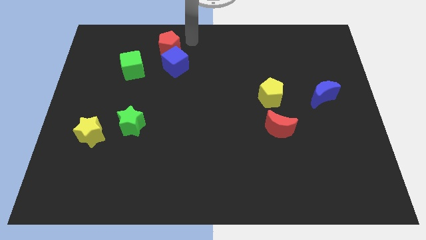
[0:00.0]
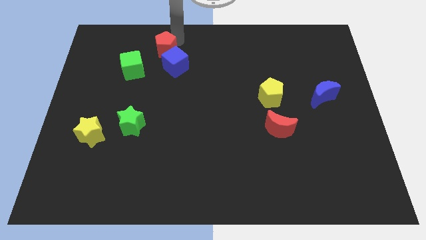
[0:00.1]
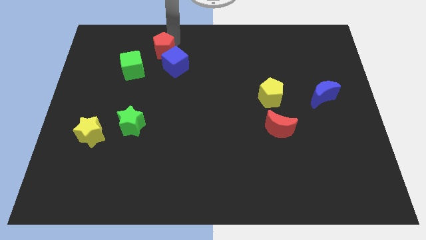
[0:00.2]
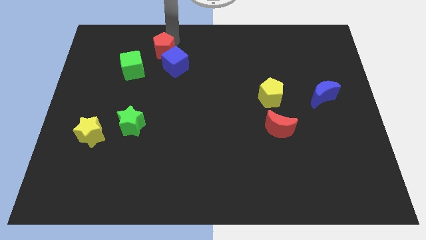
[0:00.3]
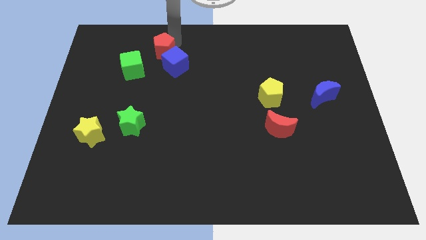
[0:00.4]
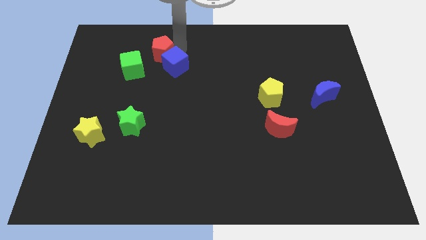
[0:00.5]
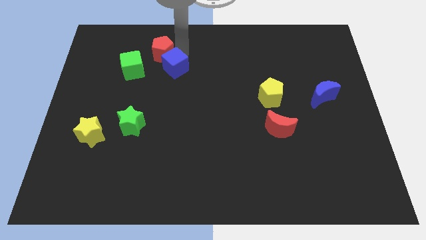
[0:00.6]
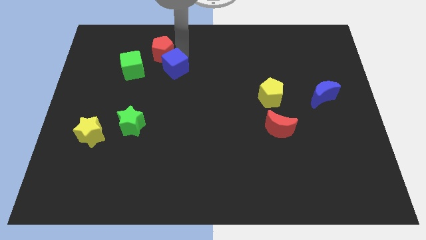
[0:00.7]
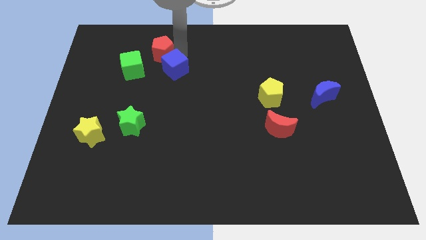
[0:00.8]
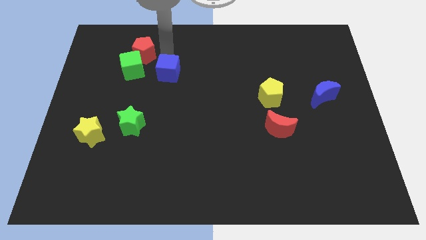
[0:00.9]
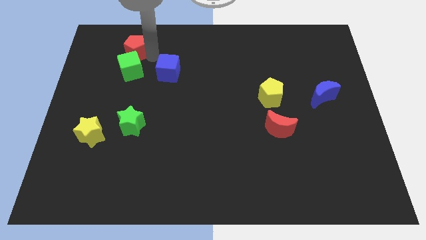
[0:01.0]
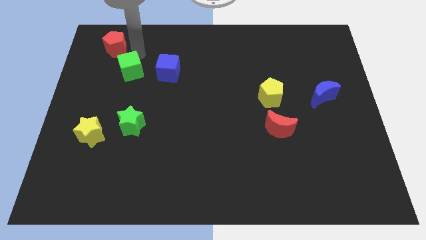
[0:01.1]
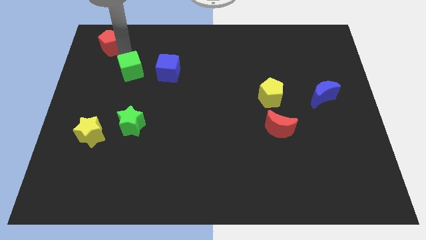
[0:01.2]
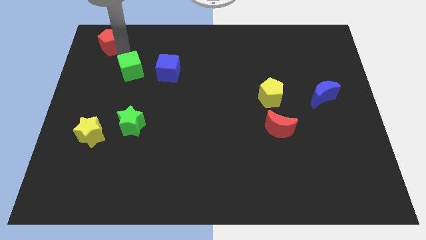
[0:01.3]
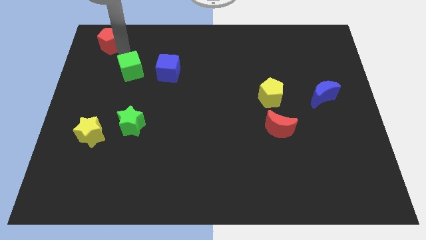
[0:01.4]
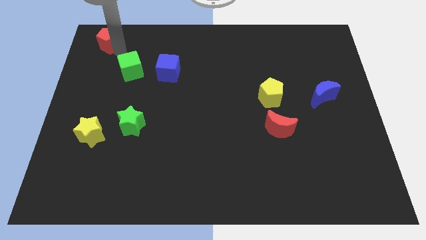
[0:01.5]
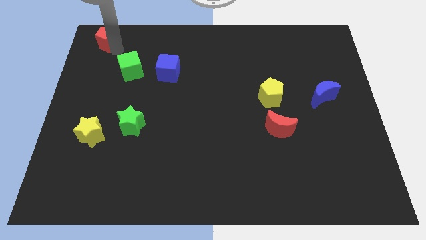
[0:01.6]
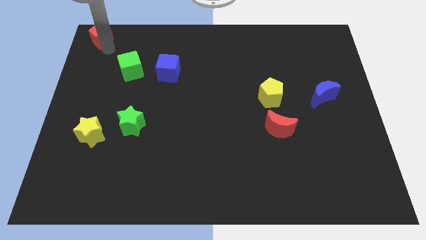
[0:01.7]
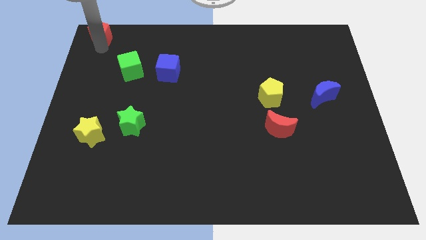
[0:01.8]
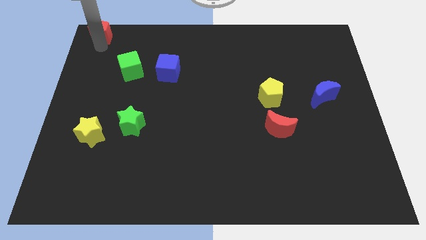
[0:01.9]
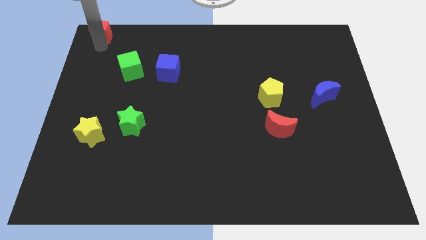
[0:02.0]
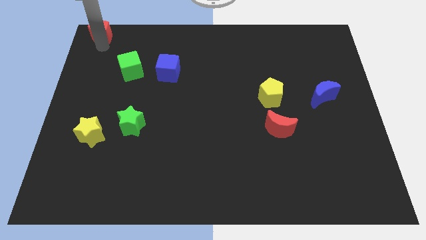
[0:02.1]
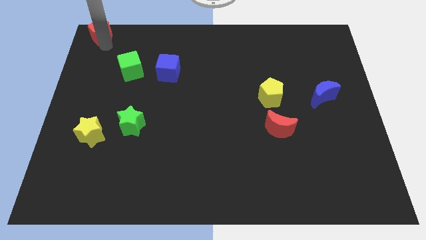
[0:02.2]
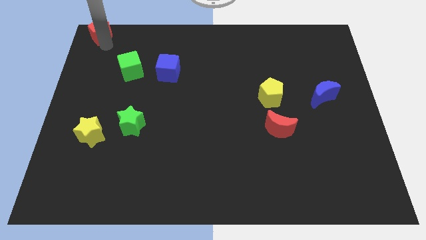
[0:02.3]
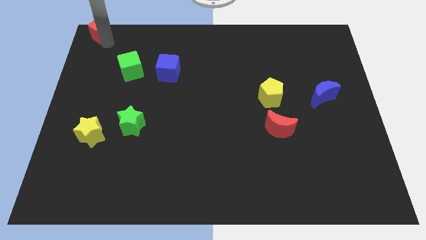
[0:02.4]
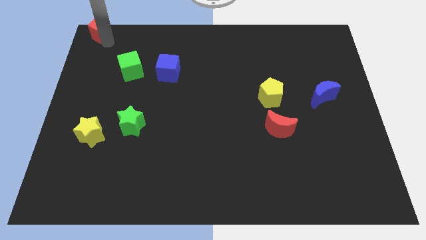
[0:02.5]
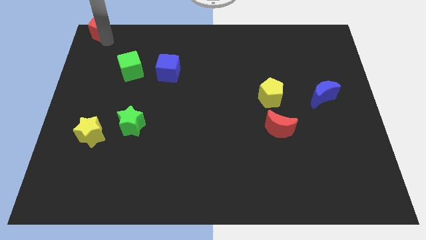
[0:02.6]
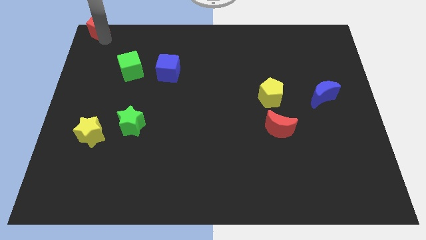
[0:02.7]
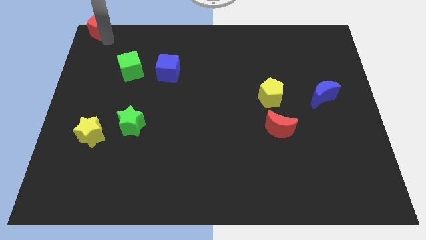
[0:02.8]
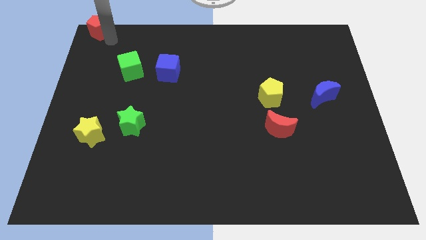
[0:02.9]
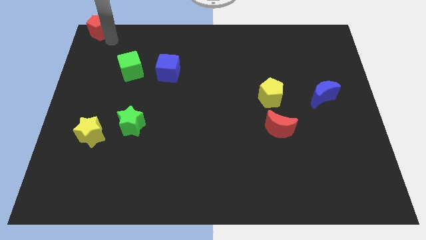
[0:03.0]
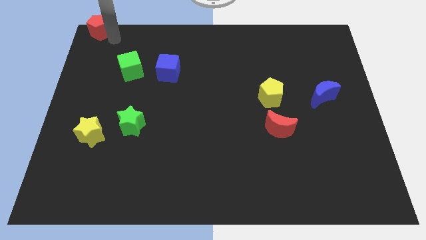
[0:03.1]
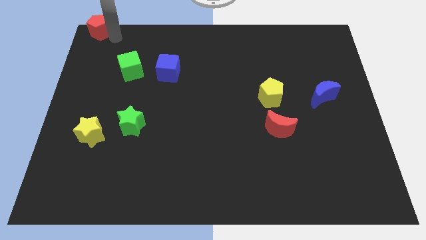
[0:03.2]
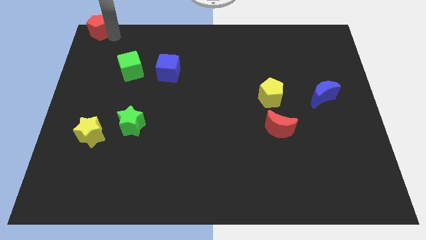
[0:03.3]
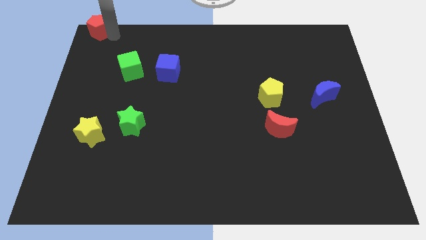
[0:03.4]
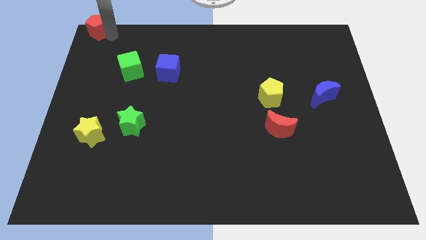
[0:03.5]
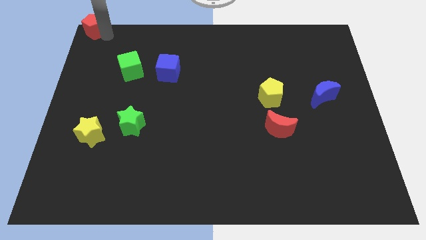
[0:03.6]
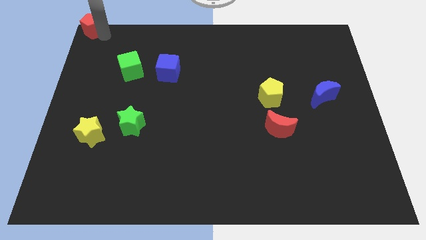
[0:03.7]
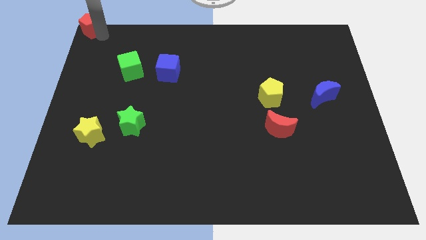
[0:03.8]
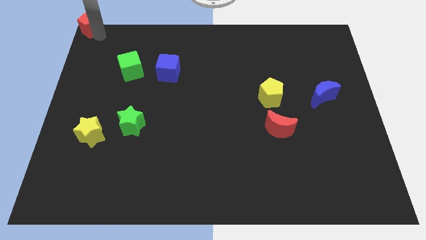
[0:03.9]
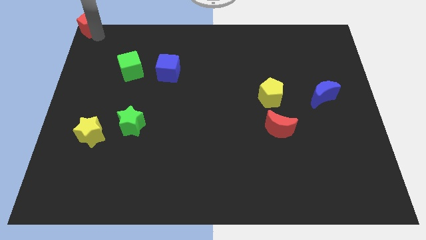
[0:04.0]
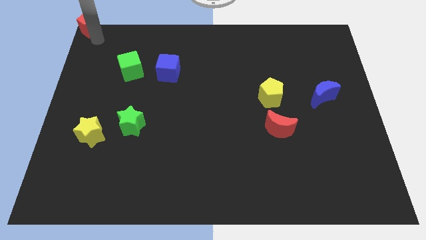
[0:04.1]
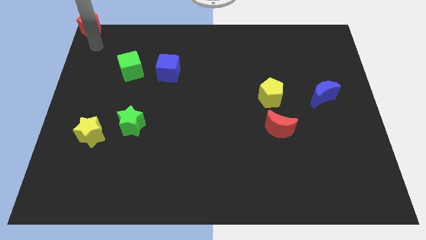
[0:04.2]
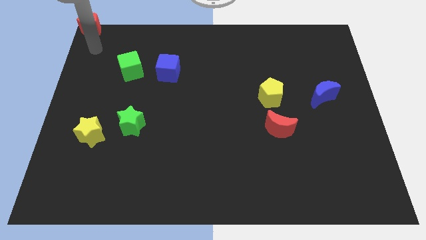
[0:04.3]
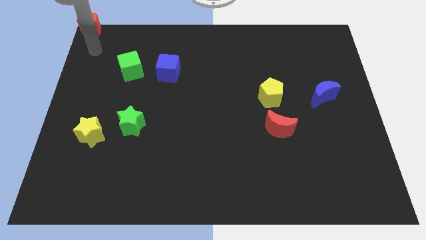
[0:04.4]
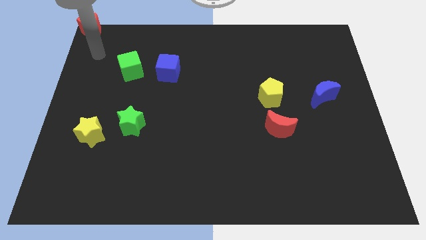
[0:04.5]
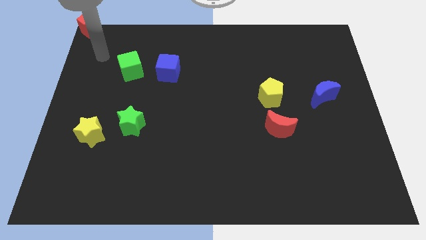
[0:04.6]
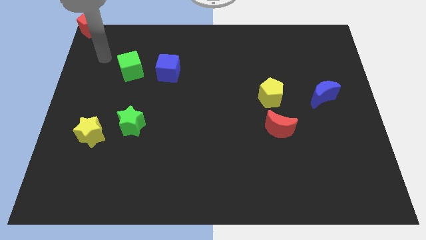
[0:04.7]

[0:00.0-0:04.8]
push the red pentagon to the top left corner of the board

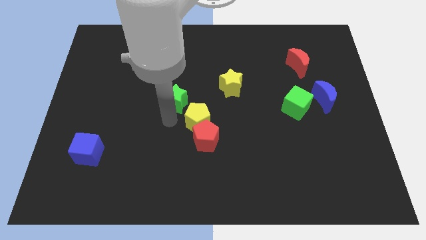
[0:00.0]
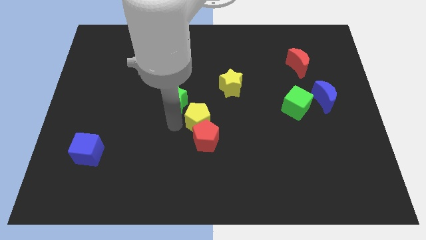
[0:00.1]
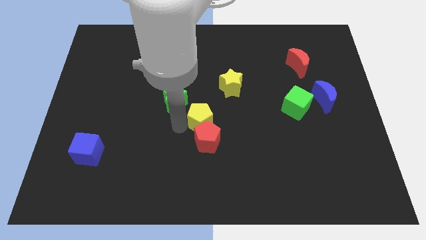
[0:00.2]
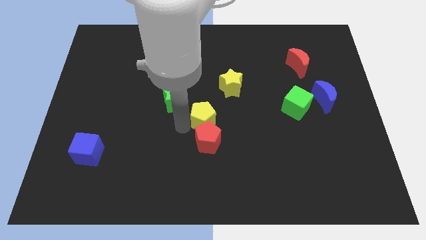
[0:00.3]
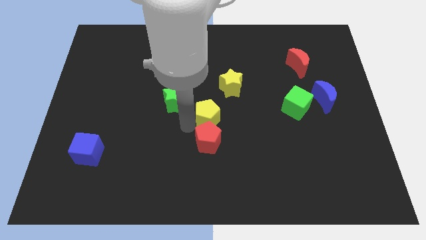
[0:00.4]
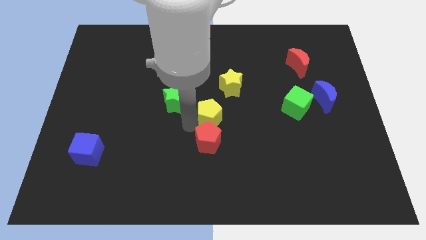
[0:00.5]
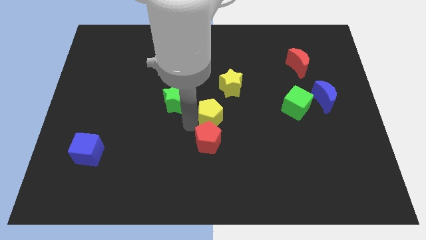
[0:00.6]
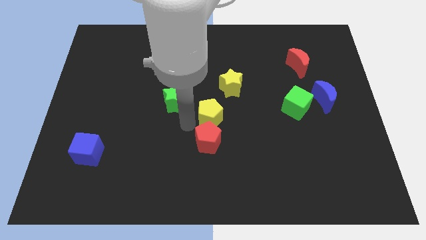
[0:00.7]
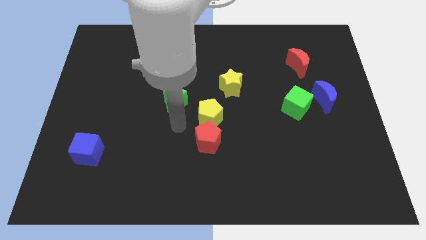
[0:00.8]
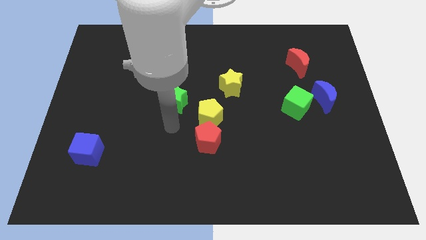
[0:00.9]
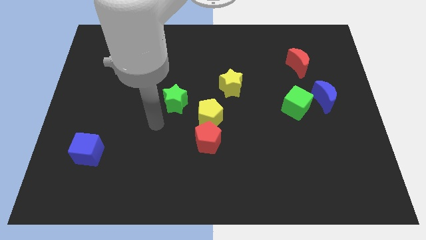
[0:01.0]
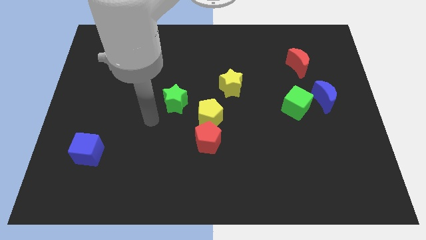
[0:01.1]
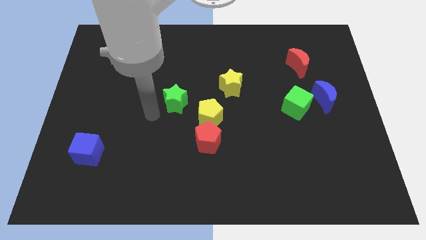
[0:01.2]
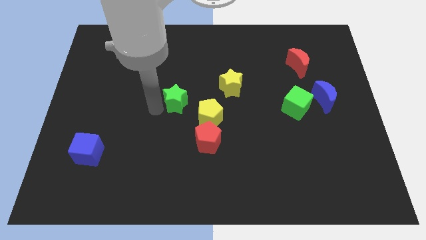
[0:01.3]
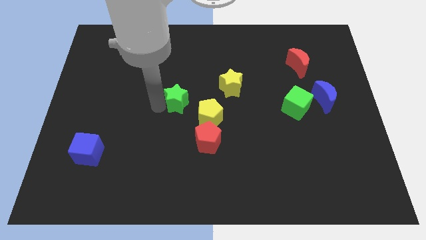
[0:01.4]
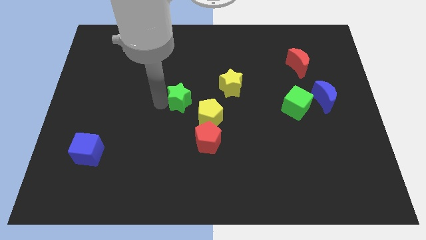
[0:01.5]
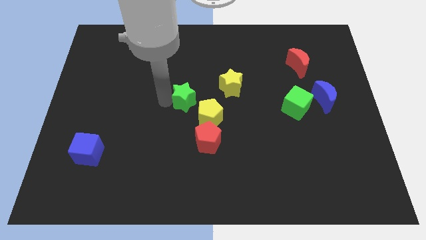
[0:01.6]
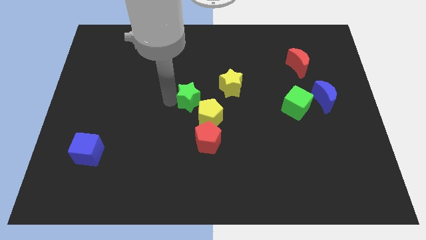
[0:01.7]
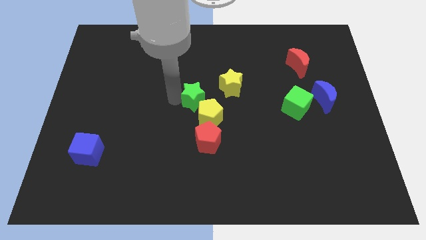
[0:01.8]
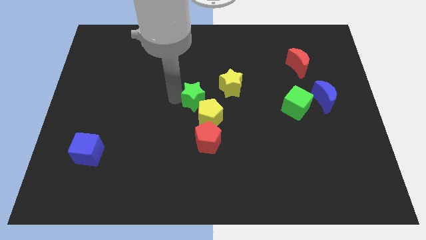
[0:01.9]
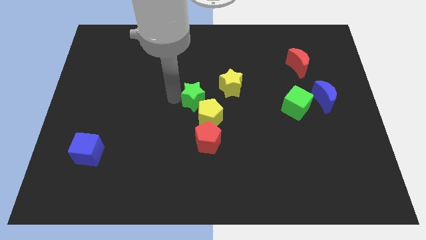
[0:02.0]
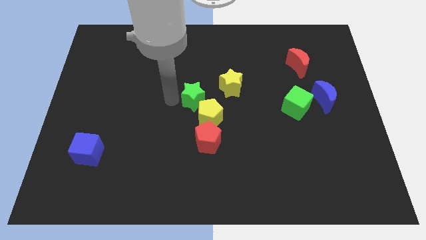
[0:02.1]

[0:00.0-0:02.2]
move the green star diagonal to the yellow pentagon

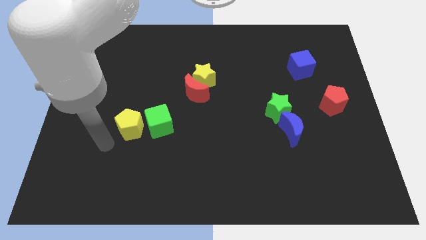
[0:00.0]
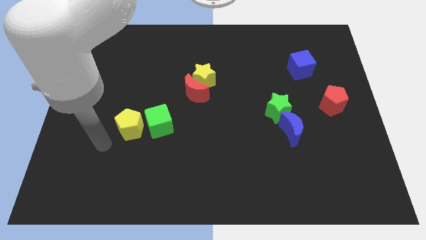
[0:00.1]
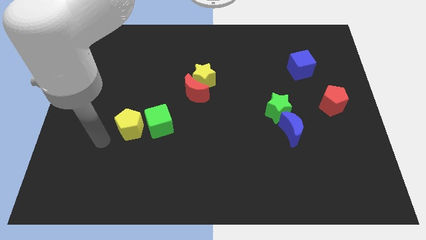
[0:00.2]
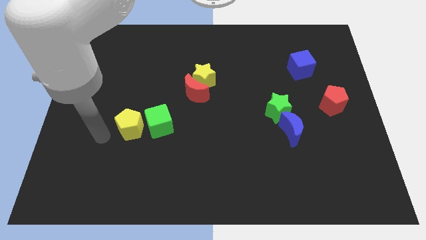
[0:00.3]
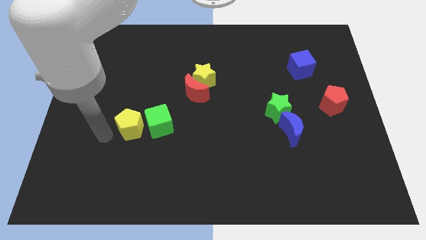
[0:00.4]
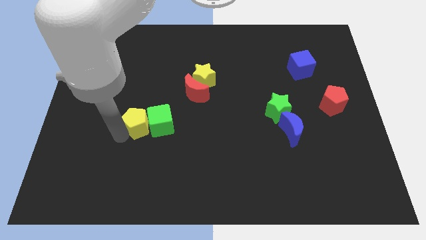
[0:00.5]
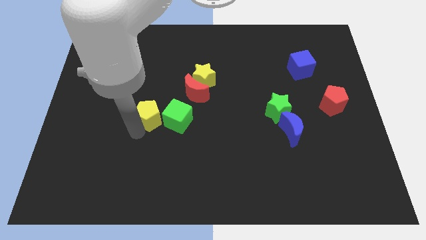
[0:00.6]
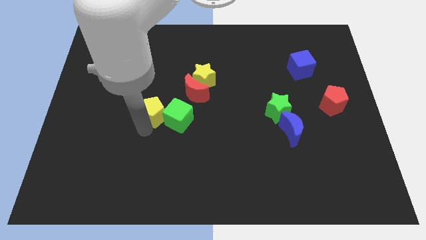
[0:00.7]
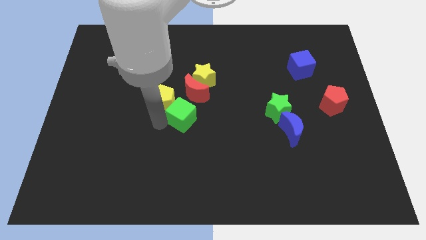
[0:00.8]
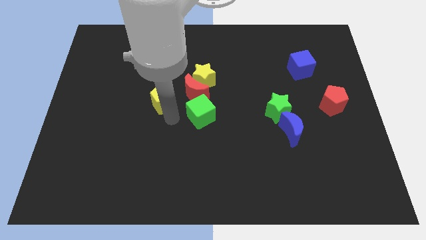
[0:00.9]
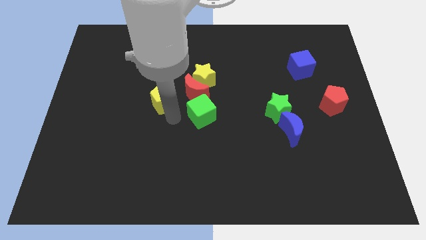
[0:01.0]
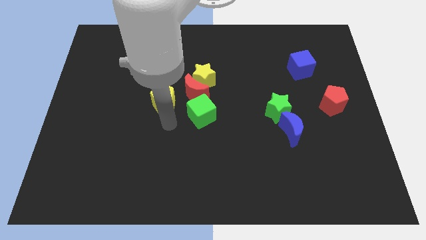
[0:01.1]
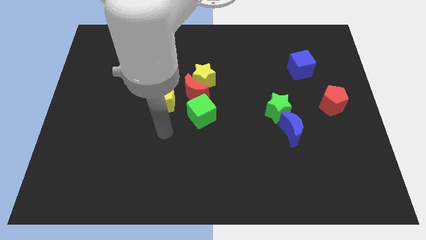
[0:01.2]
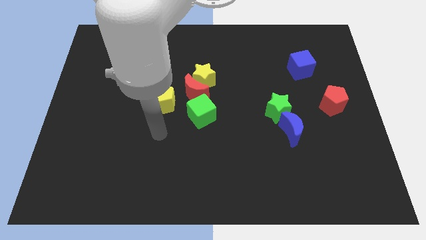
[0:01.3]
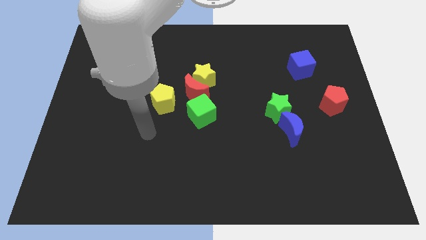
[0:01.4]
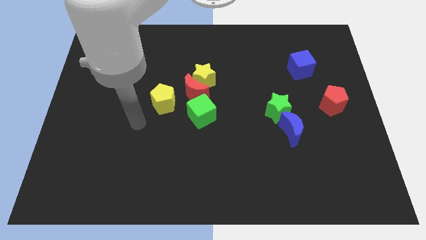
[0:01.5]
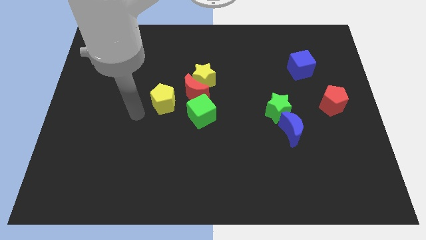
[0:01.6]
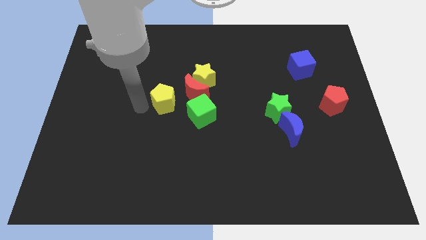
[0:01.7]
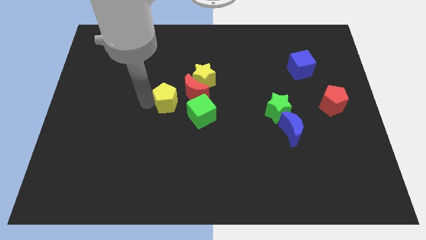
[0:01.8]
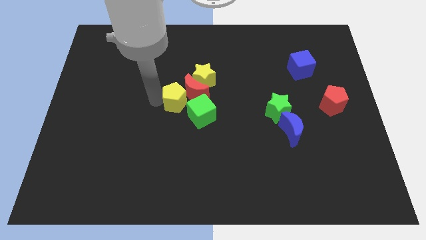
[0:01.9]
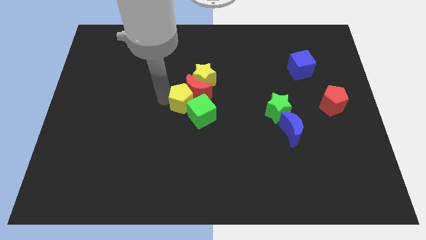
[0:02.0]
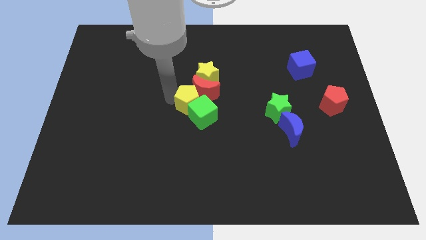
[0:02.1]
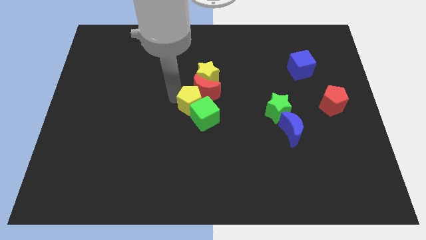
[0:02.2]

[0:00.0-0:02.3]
move the yellow pentagon into the red moon
